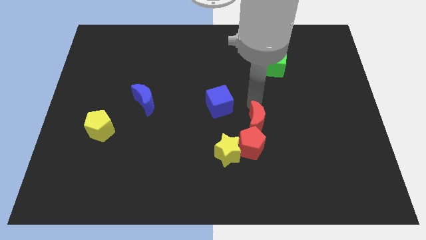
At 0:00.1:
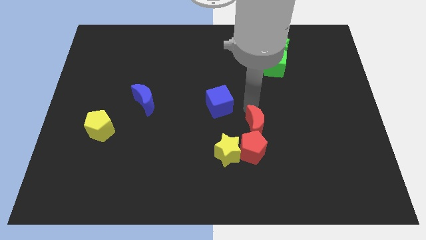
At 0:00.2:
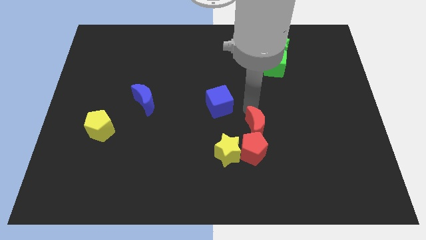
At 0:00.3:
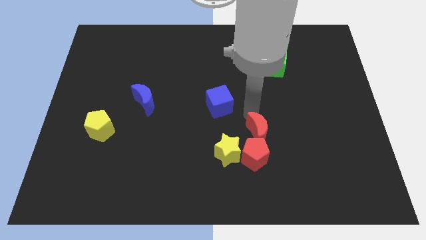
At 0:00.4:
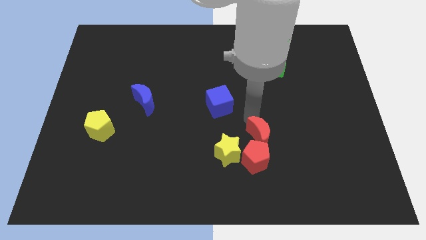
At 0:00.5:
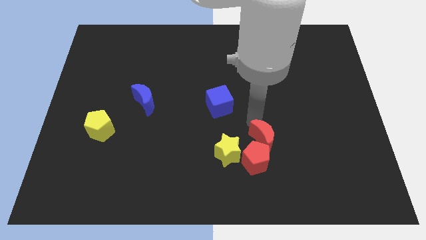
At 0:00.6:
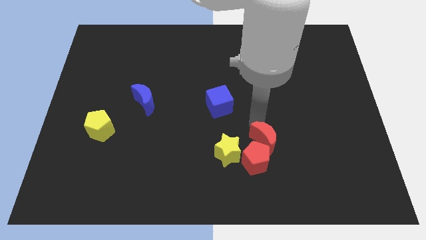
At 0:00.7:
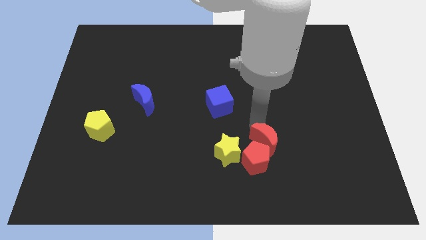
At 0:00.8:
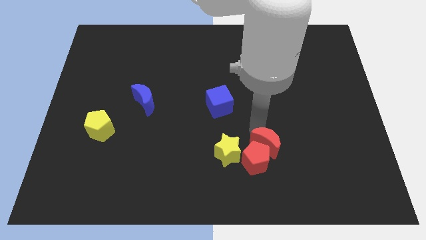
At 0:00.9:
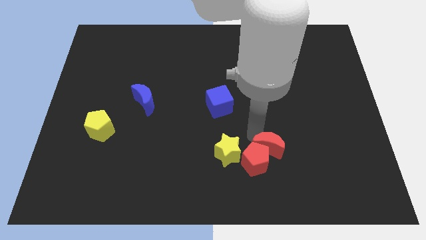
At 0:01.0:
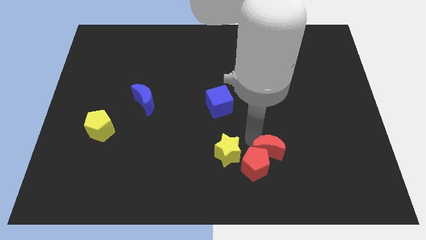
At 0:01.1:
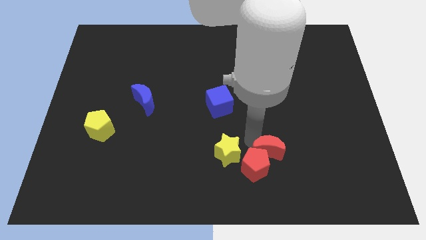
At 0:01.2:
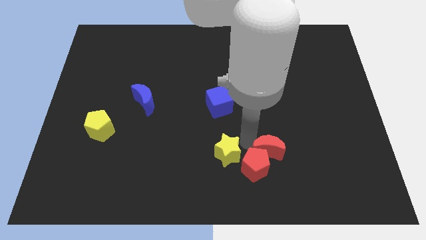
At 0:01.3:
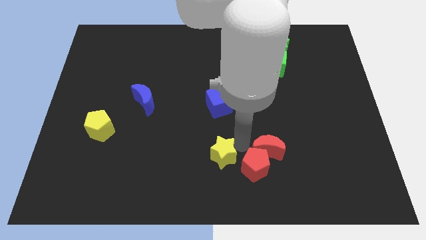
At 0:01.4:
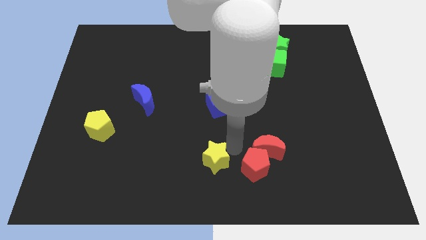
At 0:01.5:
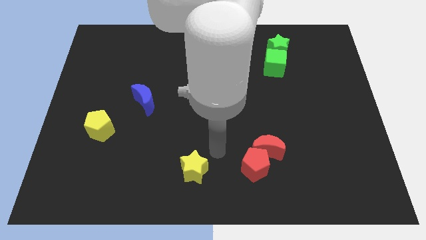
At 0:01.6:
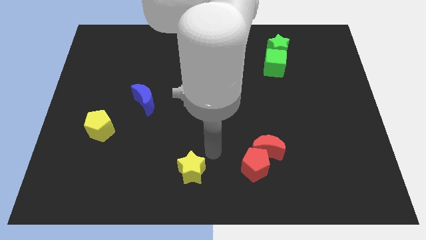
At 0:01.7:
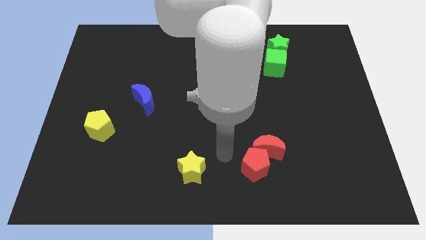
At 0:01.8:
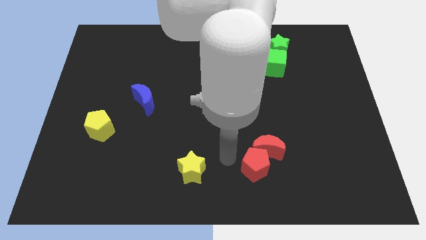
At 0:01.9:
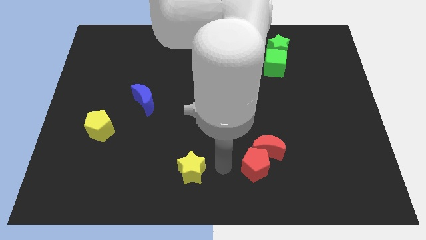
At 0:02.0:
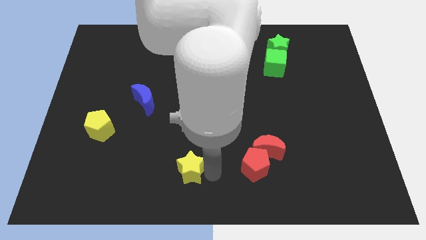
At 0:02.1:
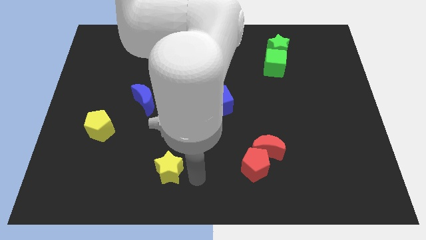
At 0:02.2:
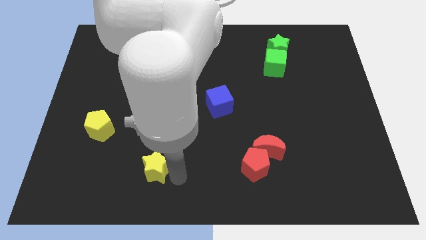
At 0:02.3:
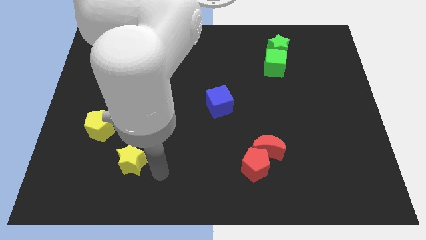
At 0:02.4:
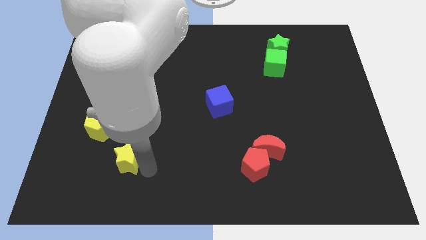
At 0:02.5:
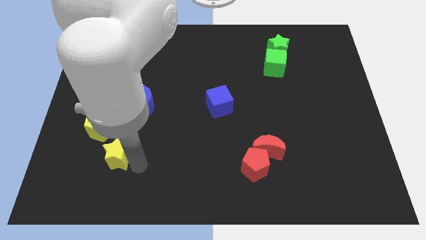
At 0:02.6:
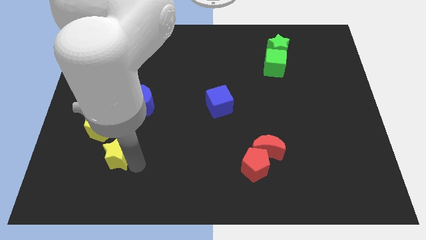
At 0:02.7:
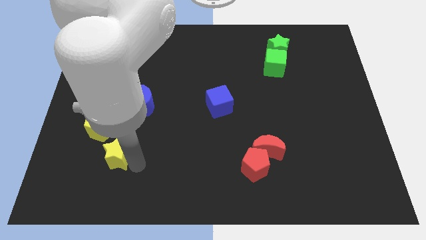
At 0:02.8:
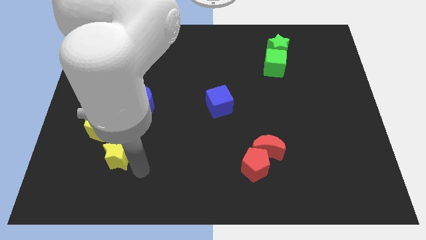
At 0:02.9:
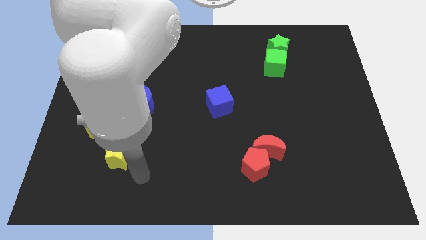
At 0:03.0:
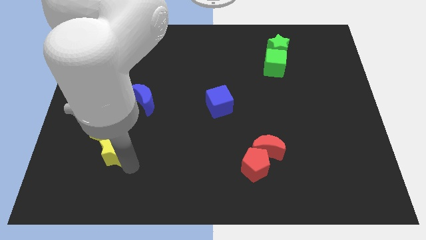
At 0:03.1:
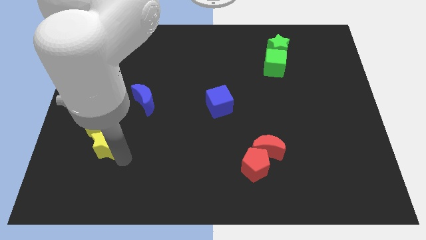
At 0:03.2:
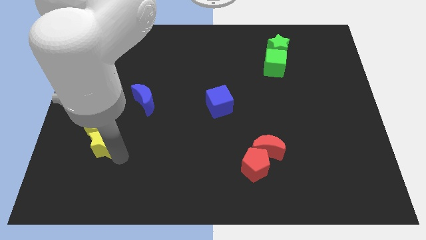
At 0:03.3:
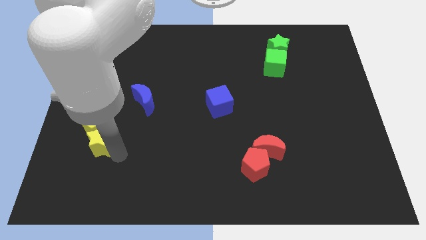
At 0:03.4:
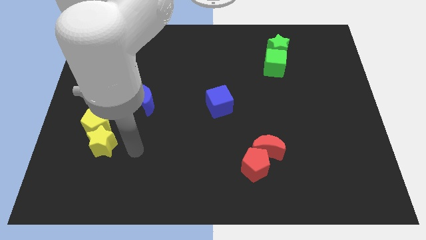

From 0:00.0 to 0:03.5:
move the yellow star bottom to the yellow pentagon

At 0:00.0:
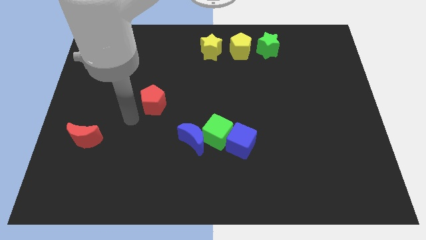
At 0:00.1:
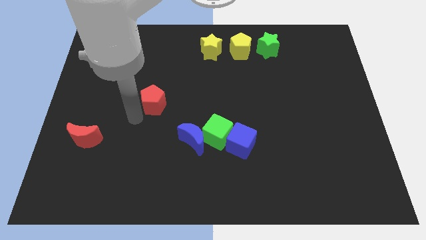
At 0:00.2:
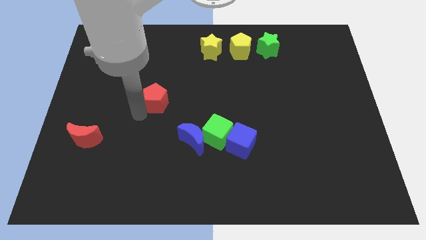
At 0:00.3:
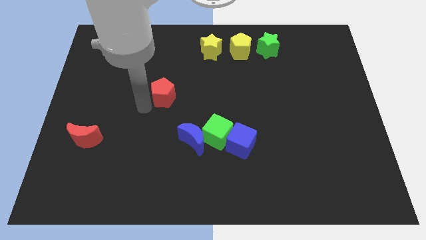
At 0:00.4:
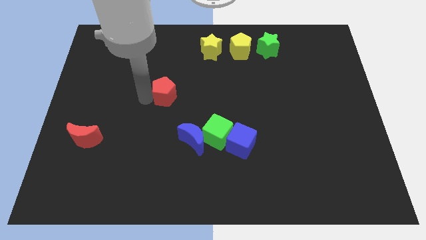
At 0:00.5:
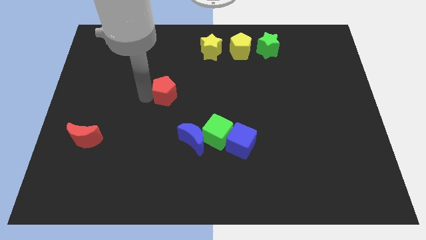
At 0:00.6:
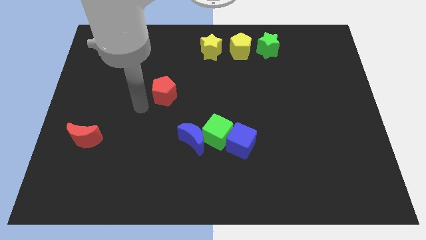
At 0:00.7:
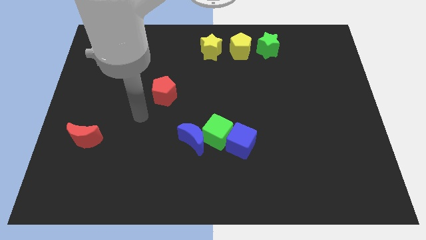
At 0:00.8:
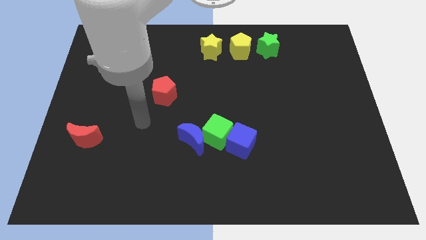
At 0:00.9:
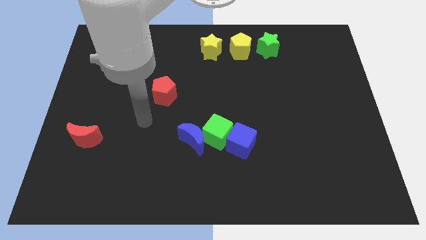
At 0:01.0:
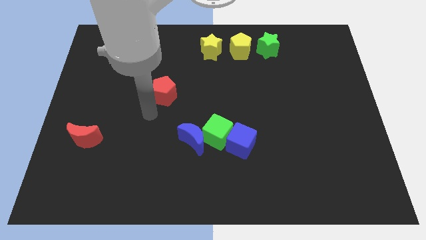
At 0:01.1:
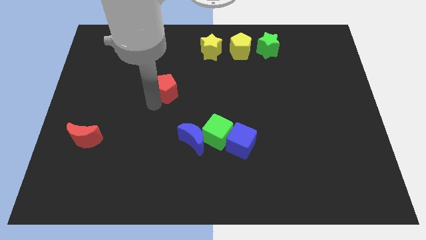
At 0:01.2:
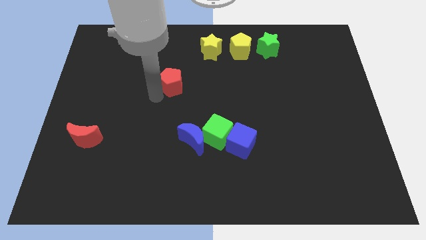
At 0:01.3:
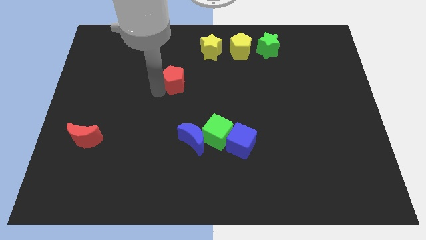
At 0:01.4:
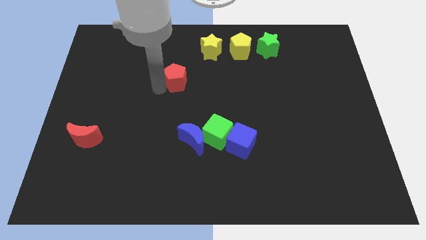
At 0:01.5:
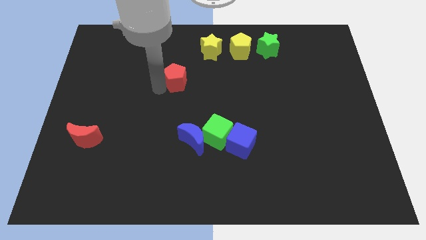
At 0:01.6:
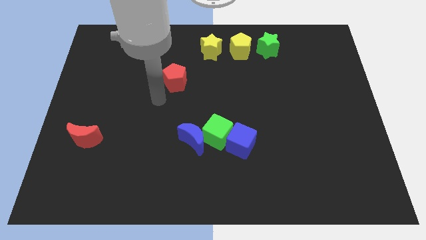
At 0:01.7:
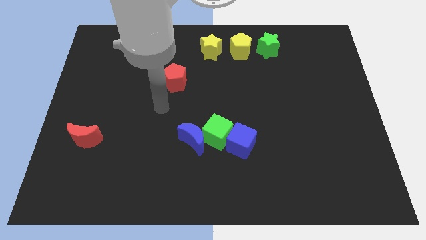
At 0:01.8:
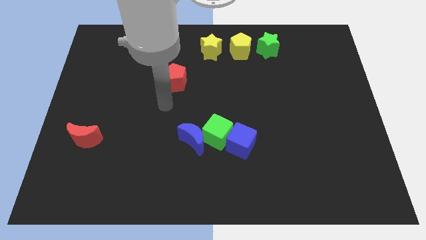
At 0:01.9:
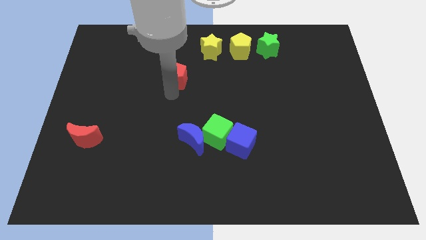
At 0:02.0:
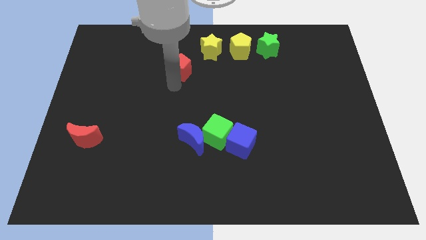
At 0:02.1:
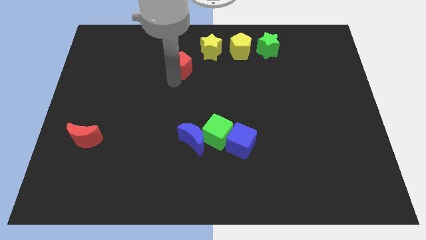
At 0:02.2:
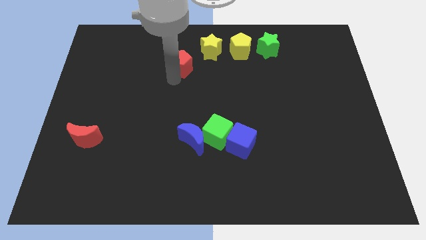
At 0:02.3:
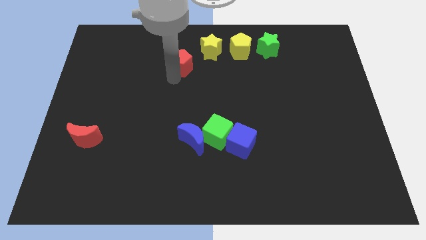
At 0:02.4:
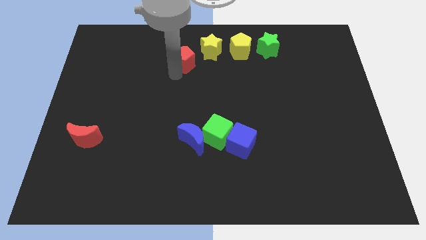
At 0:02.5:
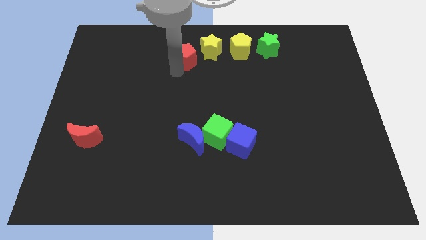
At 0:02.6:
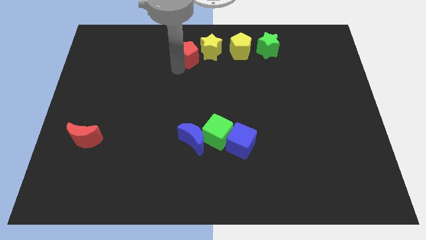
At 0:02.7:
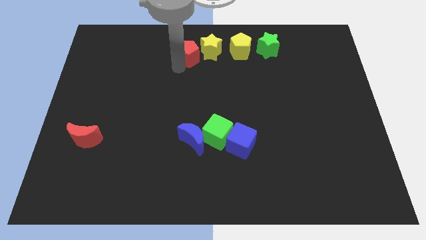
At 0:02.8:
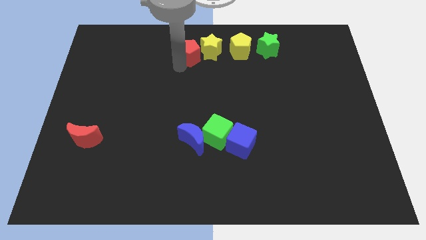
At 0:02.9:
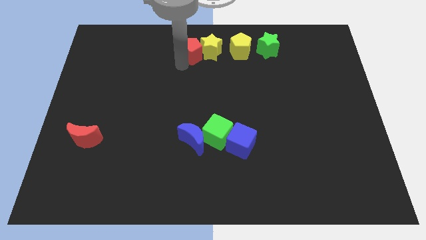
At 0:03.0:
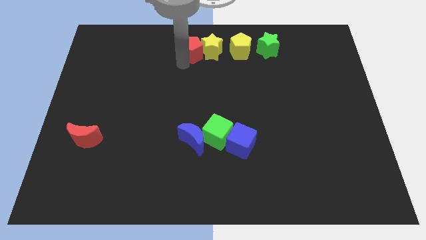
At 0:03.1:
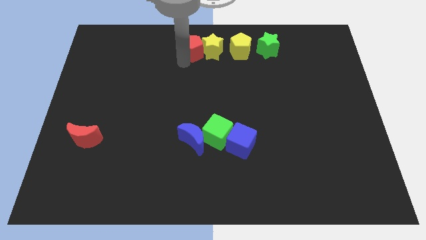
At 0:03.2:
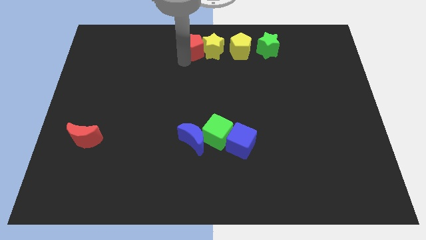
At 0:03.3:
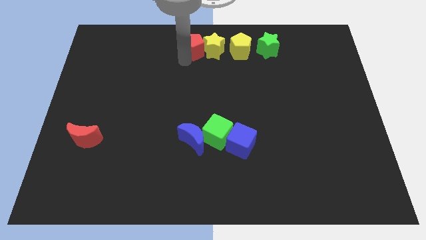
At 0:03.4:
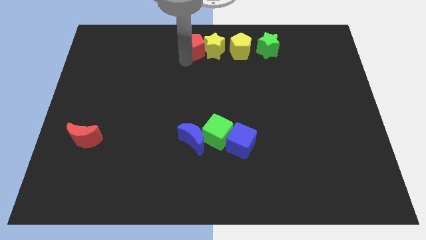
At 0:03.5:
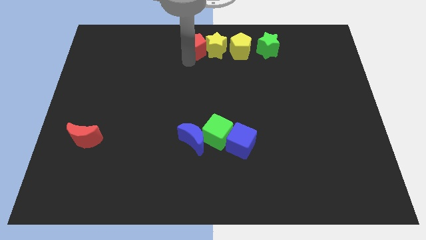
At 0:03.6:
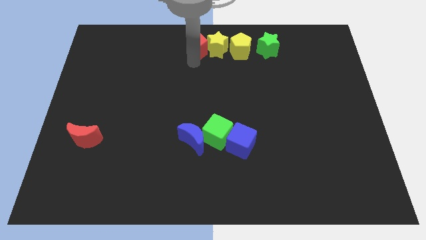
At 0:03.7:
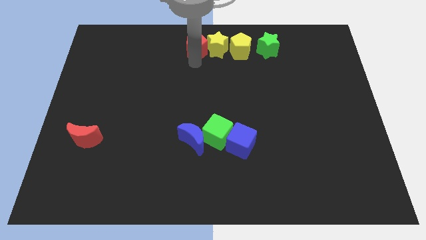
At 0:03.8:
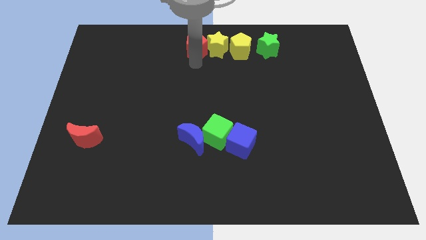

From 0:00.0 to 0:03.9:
move the red pentagon to the left side of the yellow star

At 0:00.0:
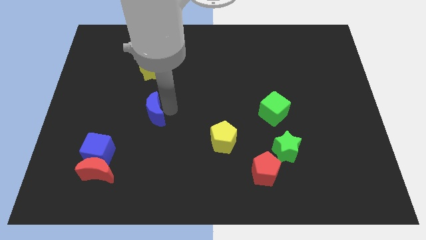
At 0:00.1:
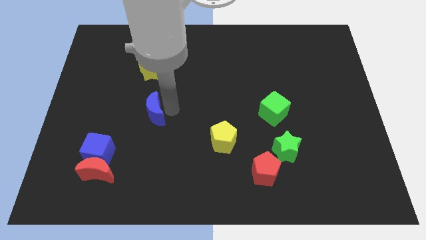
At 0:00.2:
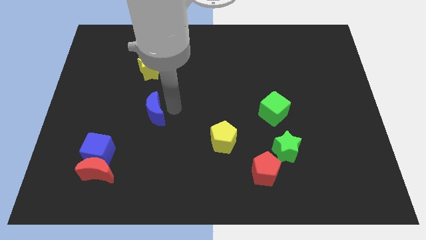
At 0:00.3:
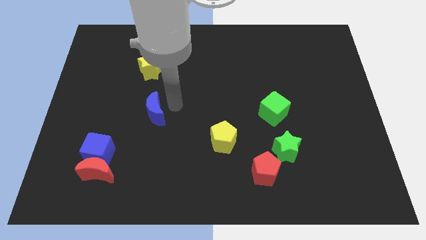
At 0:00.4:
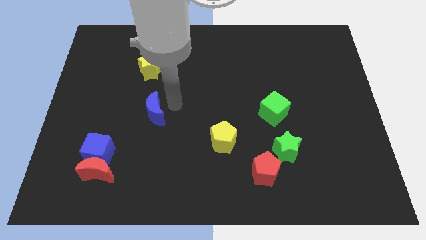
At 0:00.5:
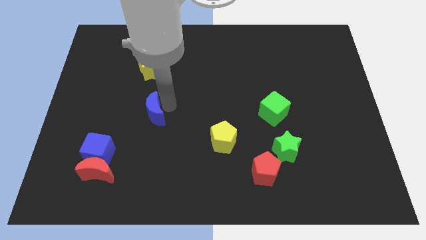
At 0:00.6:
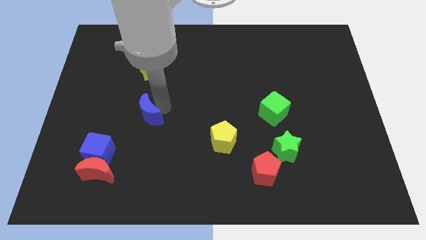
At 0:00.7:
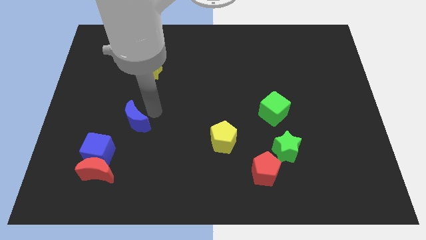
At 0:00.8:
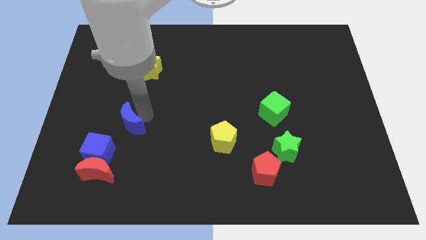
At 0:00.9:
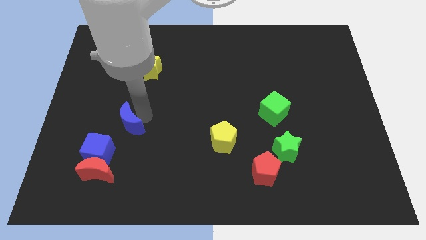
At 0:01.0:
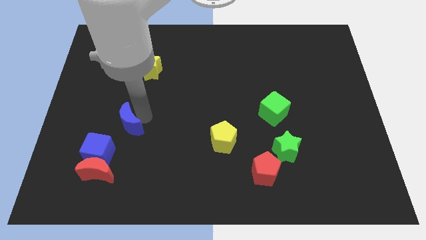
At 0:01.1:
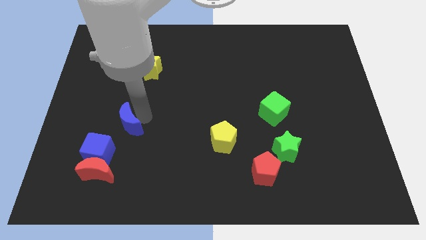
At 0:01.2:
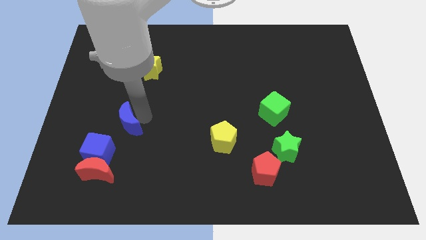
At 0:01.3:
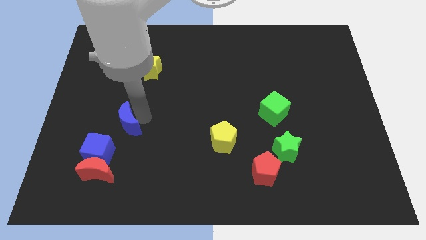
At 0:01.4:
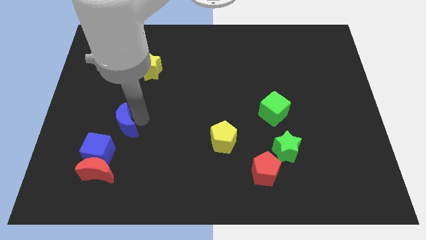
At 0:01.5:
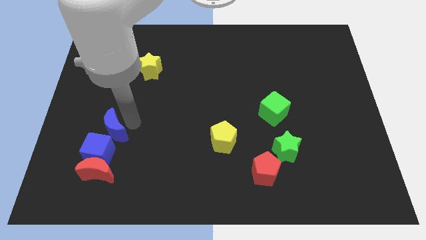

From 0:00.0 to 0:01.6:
push the blue crescent to the left of the yellow pentagon
